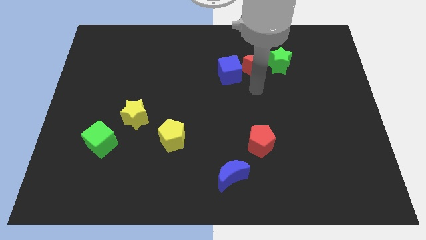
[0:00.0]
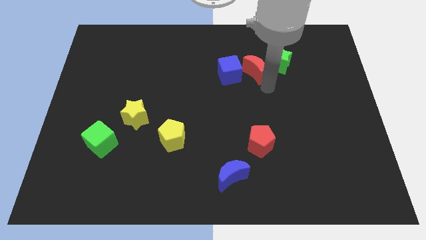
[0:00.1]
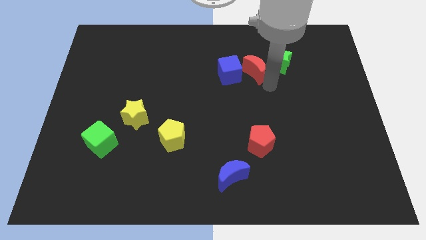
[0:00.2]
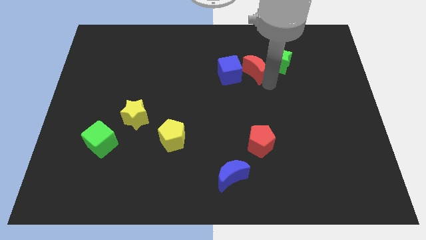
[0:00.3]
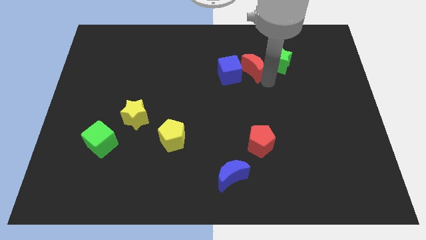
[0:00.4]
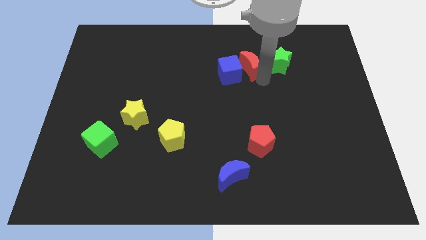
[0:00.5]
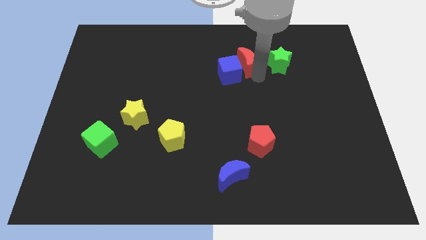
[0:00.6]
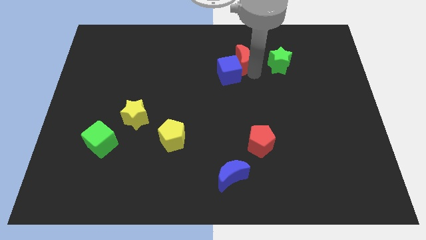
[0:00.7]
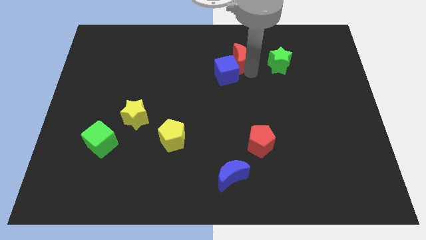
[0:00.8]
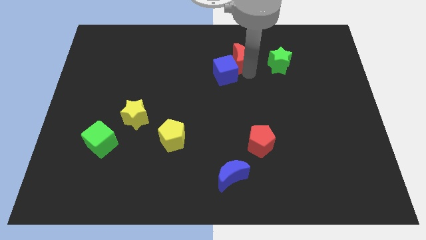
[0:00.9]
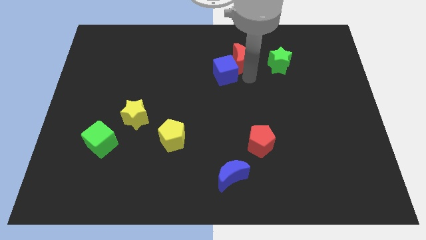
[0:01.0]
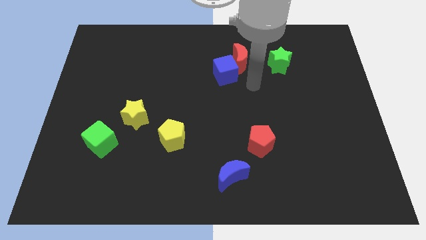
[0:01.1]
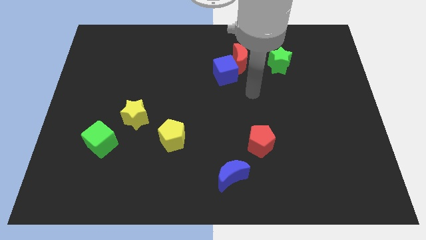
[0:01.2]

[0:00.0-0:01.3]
slide the red moon to the top right side of the blue cube

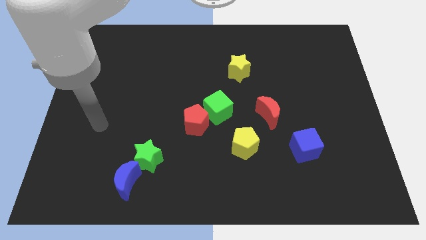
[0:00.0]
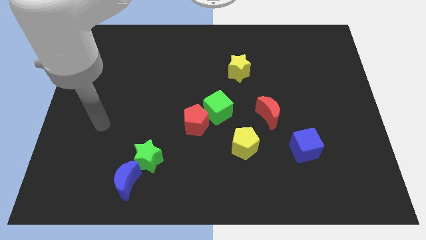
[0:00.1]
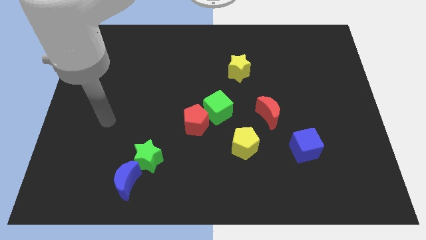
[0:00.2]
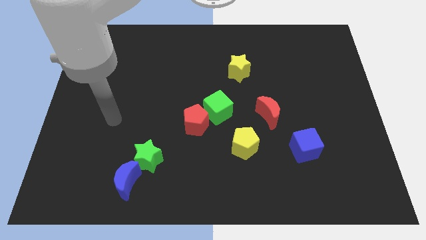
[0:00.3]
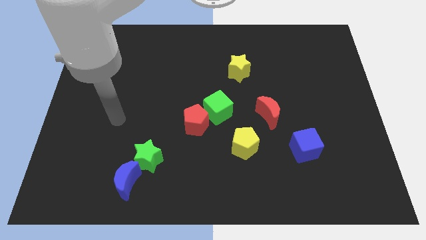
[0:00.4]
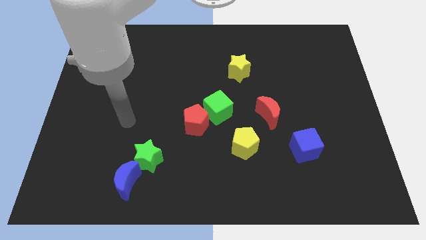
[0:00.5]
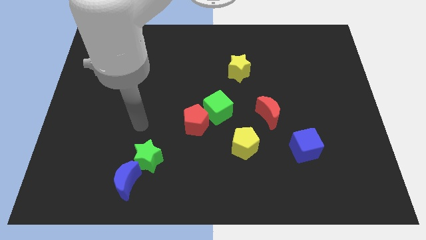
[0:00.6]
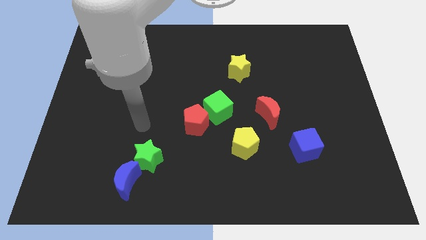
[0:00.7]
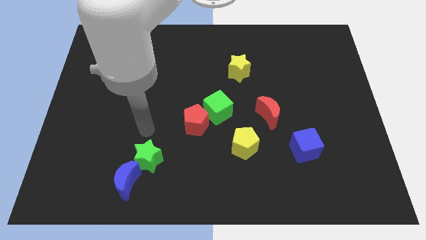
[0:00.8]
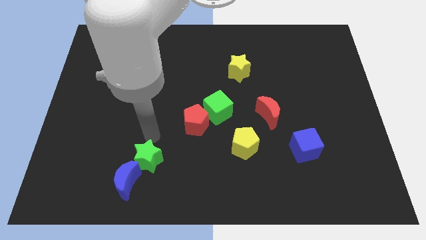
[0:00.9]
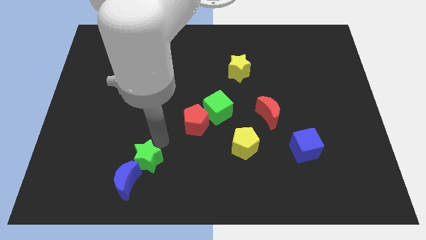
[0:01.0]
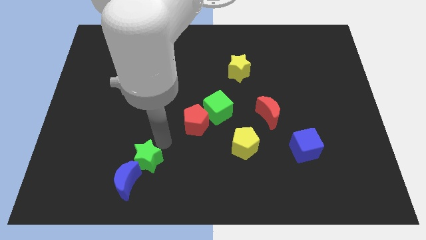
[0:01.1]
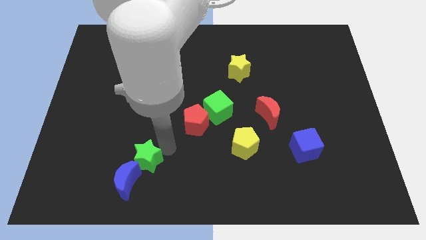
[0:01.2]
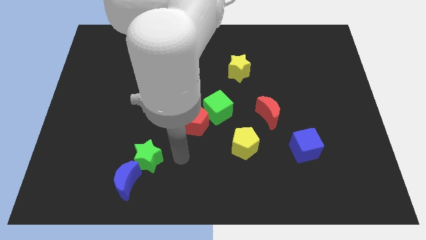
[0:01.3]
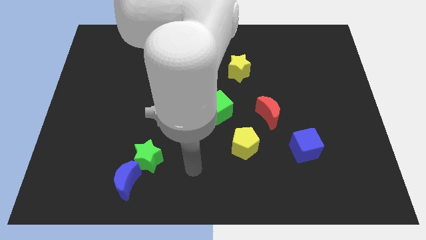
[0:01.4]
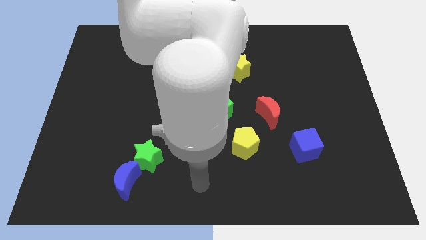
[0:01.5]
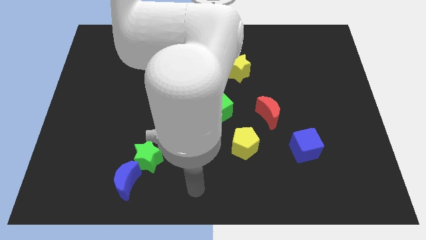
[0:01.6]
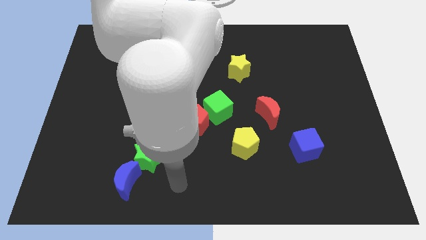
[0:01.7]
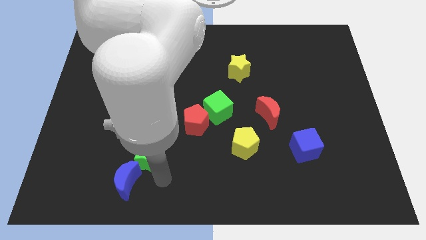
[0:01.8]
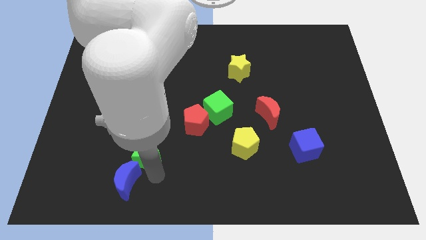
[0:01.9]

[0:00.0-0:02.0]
move your arm to the bottom right side of the green star

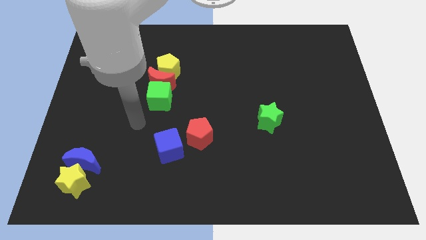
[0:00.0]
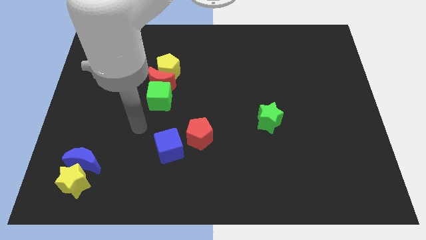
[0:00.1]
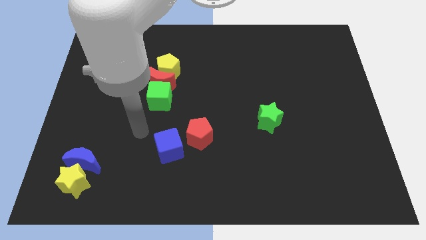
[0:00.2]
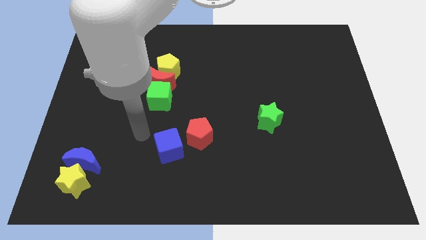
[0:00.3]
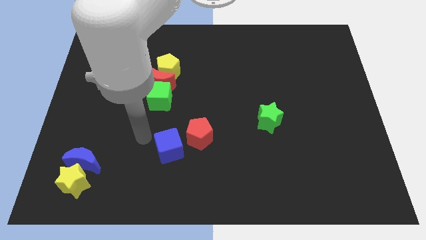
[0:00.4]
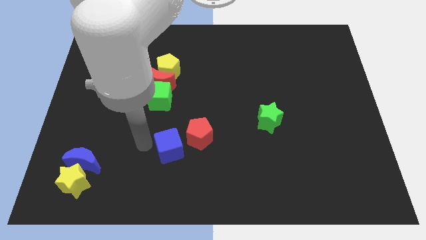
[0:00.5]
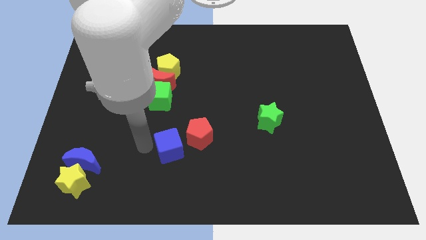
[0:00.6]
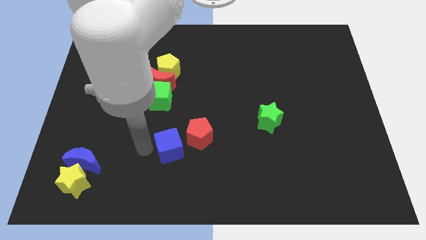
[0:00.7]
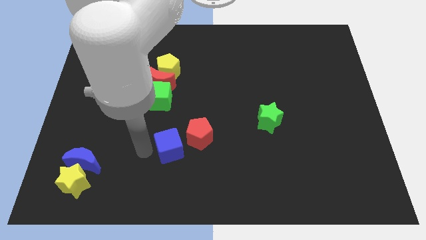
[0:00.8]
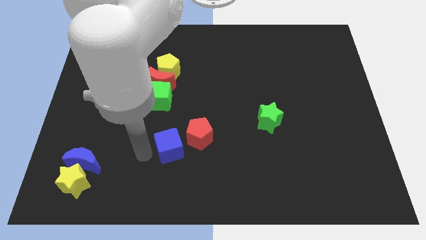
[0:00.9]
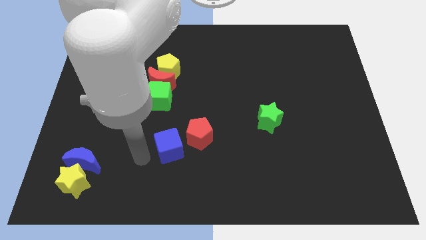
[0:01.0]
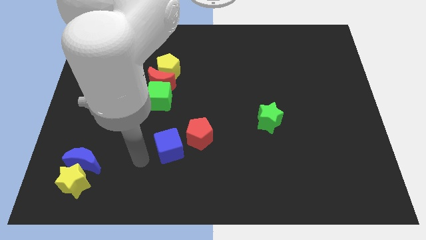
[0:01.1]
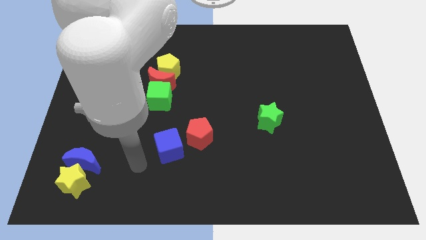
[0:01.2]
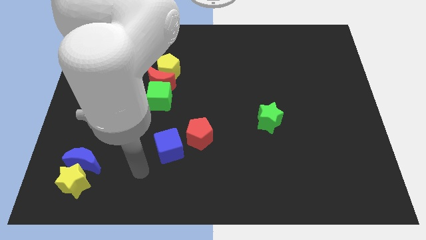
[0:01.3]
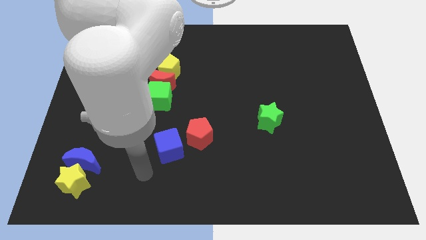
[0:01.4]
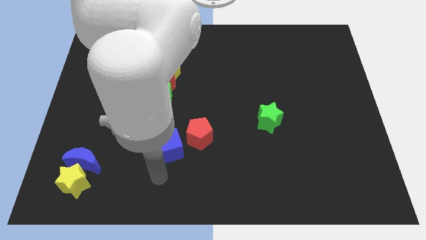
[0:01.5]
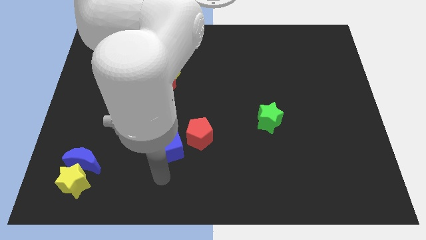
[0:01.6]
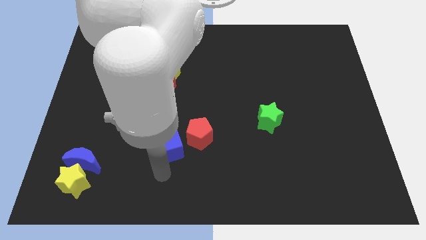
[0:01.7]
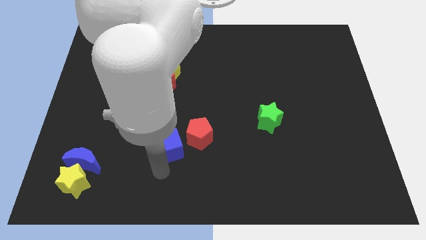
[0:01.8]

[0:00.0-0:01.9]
move the arm below the blue cube

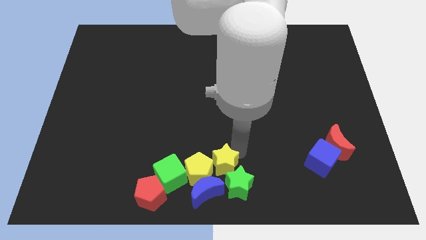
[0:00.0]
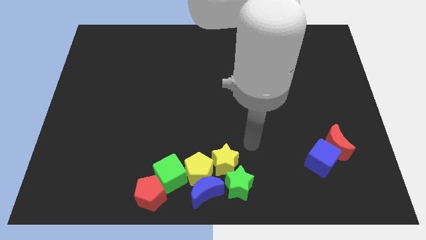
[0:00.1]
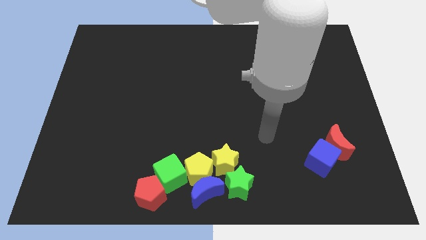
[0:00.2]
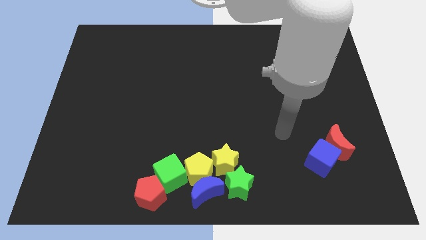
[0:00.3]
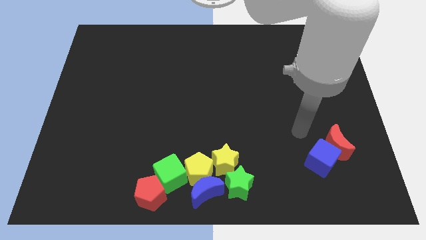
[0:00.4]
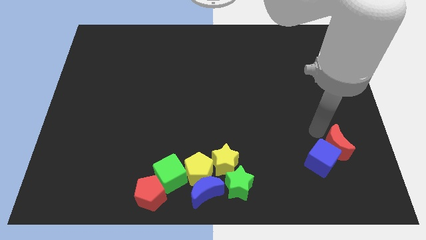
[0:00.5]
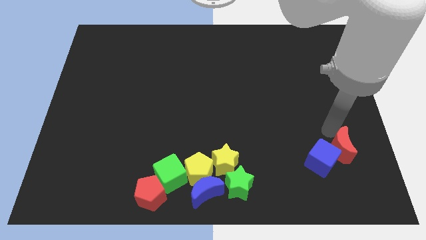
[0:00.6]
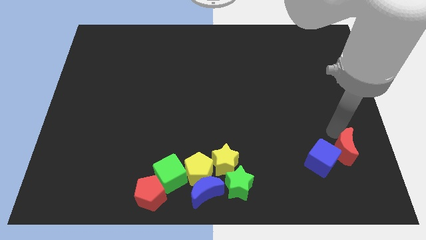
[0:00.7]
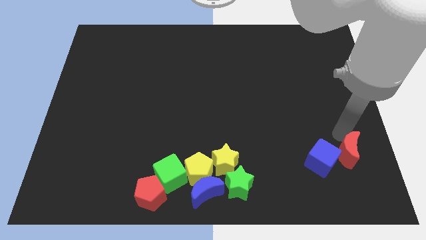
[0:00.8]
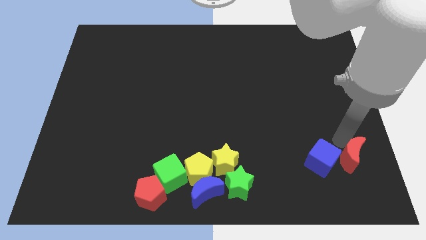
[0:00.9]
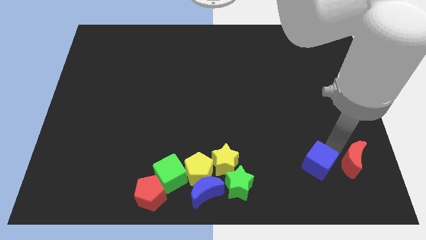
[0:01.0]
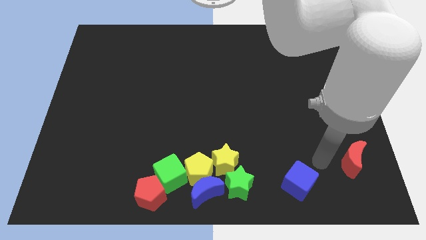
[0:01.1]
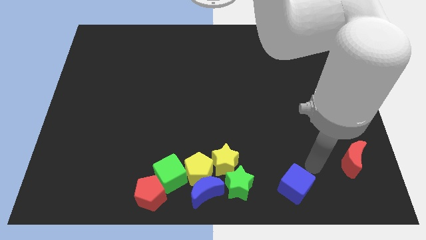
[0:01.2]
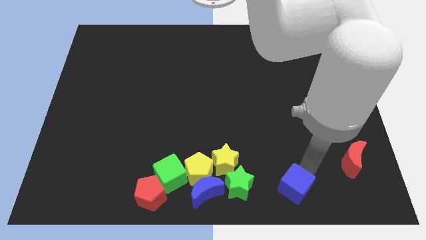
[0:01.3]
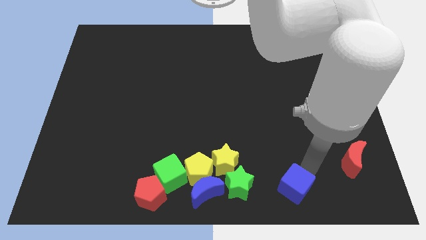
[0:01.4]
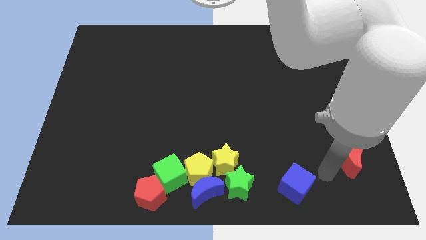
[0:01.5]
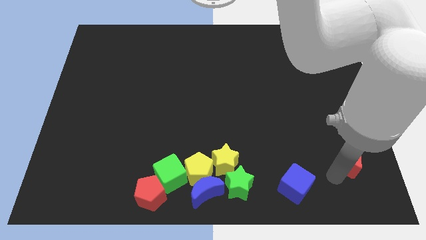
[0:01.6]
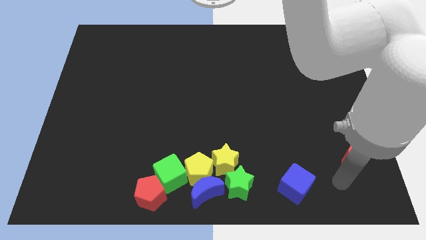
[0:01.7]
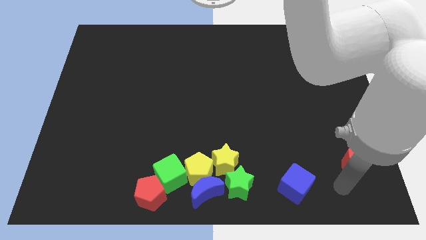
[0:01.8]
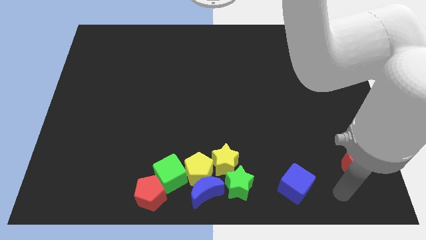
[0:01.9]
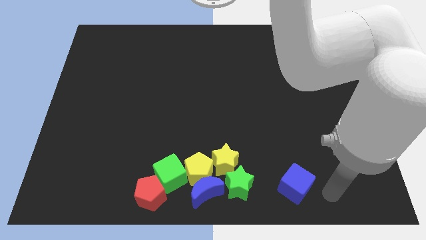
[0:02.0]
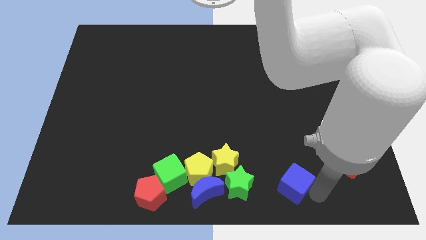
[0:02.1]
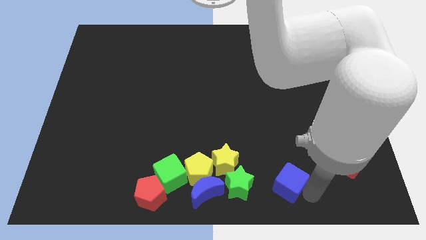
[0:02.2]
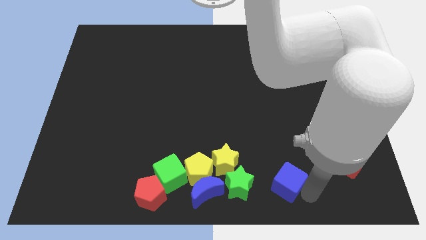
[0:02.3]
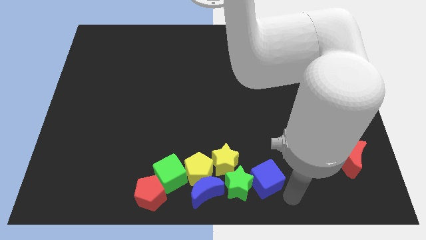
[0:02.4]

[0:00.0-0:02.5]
separate blue cube and red moon

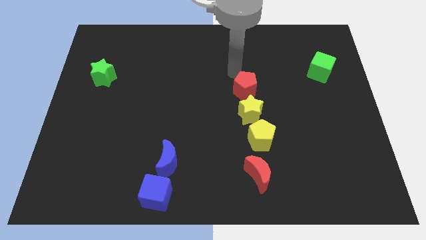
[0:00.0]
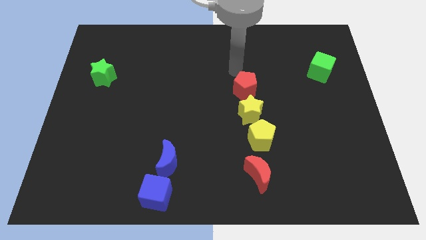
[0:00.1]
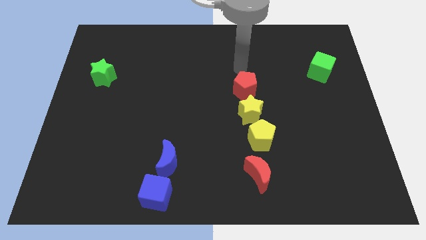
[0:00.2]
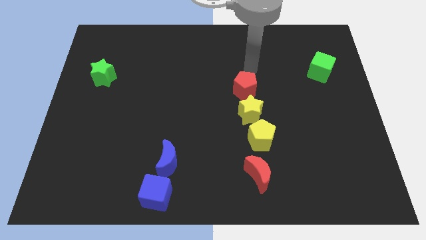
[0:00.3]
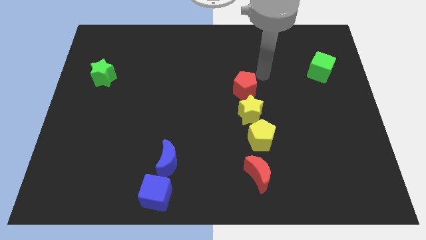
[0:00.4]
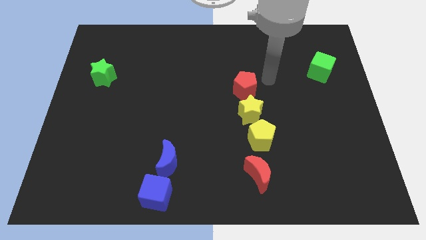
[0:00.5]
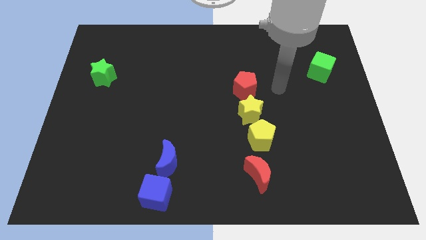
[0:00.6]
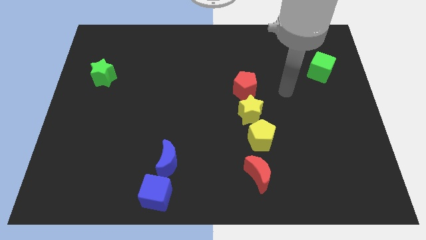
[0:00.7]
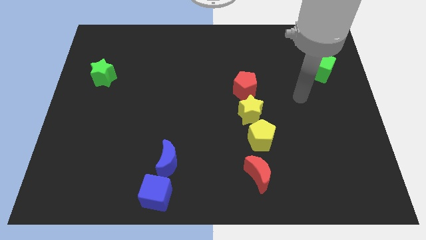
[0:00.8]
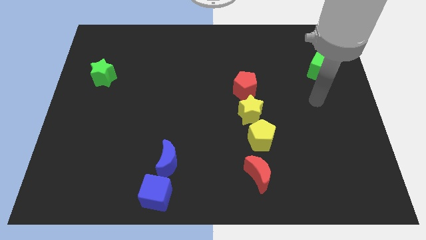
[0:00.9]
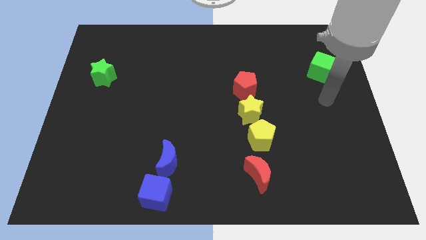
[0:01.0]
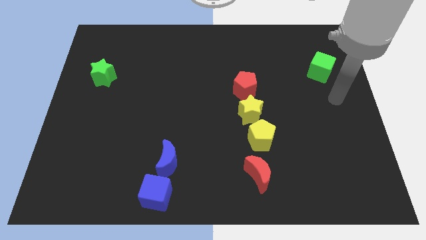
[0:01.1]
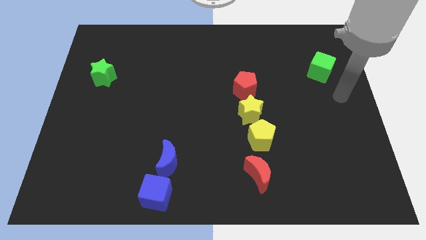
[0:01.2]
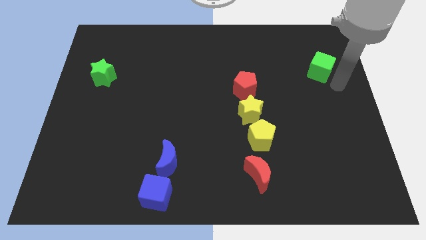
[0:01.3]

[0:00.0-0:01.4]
move your hand towards the green cube
